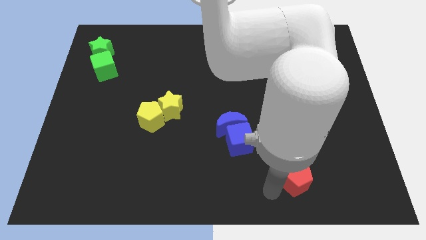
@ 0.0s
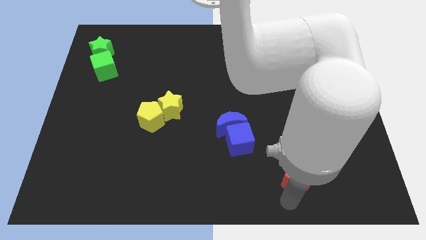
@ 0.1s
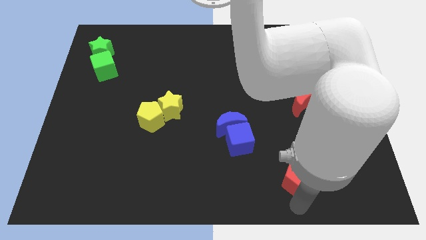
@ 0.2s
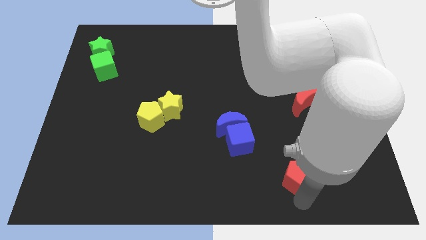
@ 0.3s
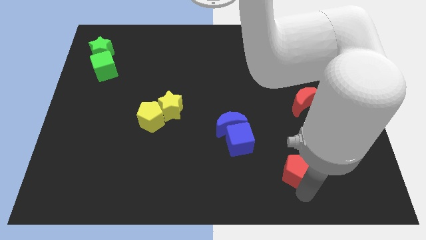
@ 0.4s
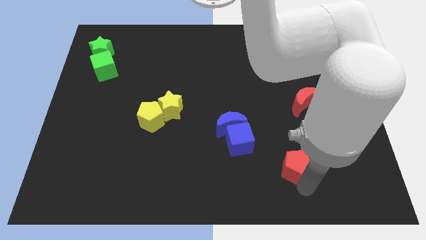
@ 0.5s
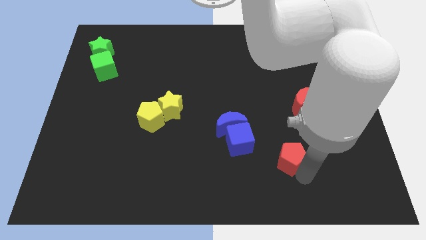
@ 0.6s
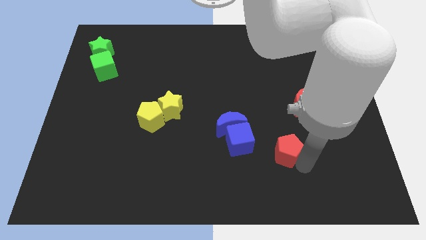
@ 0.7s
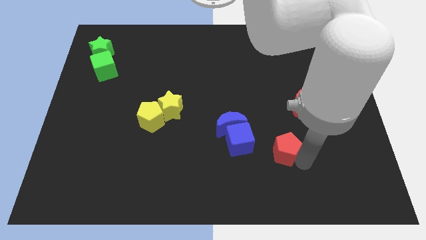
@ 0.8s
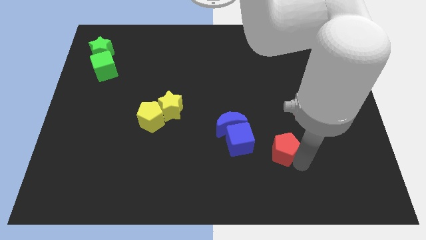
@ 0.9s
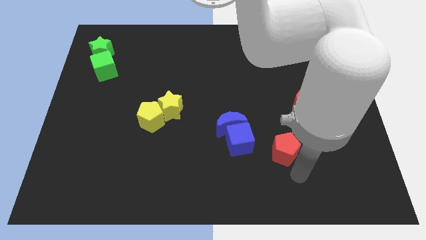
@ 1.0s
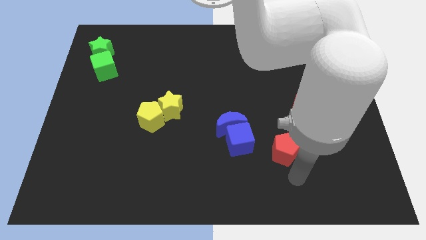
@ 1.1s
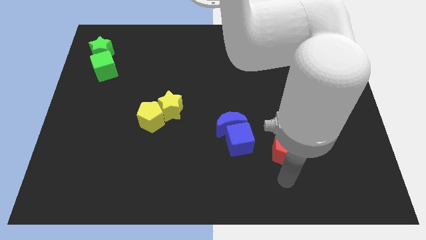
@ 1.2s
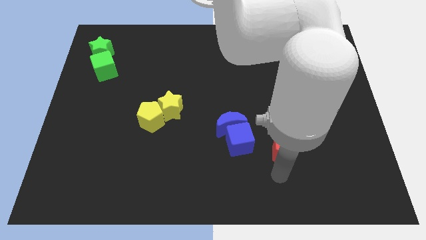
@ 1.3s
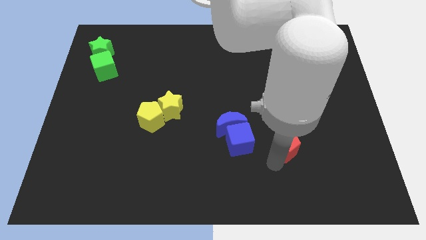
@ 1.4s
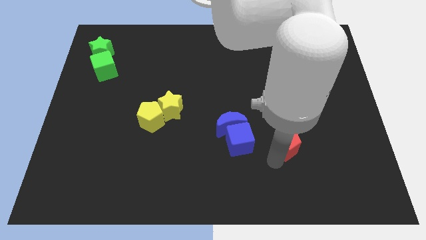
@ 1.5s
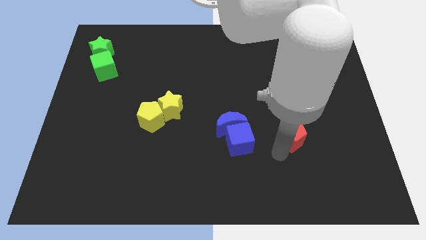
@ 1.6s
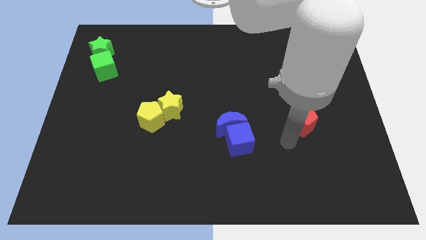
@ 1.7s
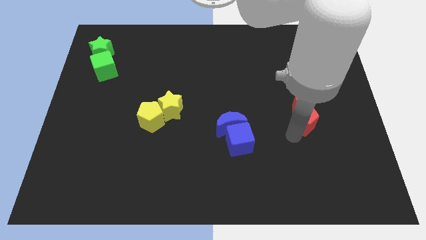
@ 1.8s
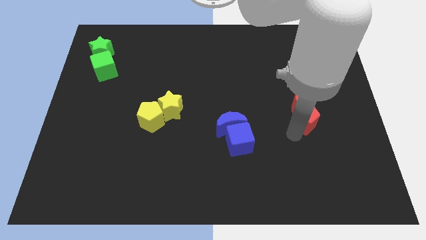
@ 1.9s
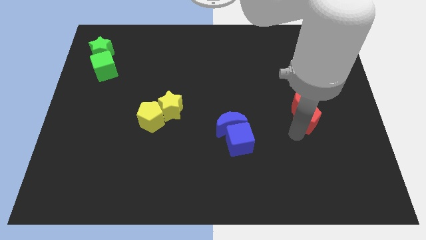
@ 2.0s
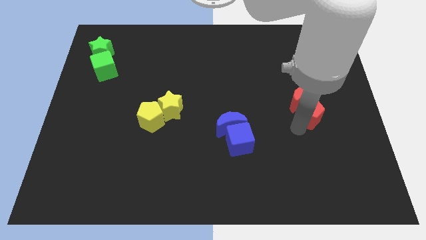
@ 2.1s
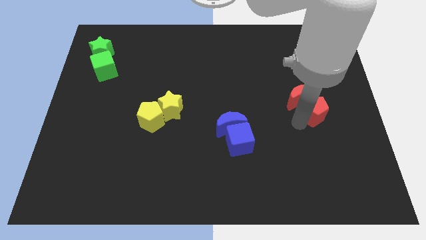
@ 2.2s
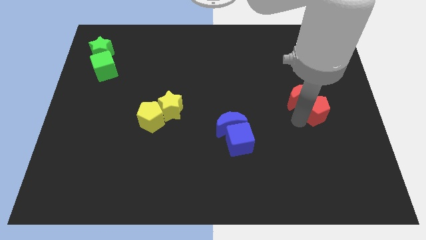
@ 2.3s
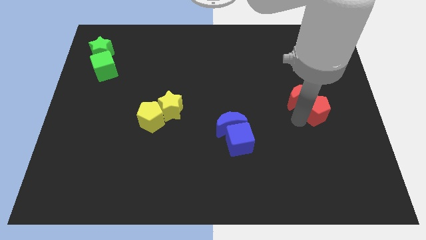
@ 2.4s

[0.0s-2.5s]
move red pentagon below the red moon

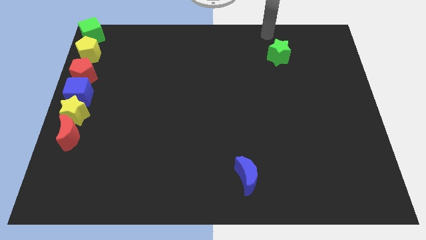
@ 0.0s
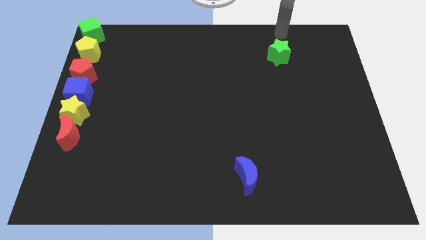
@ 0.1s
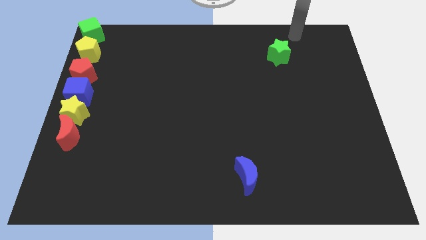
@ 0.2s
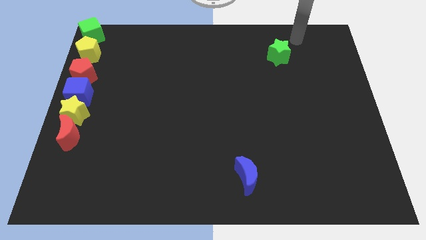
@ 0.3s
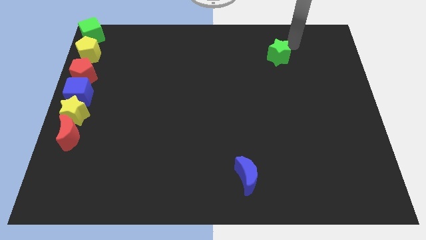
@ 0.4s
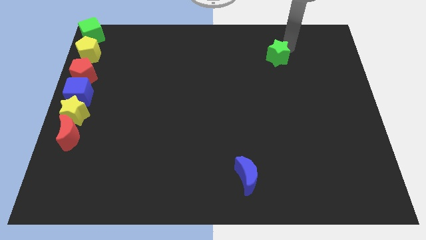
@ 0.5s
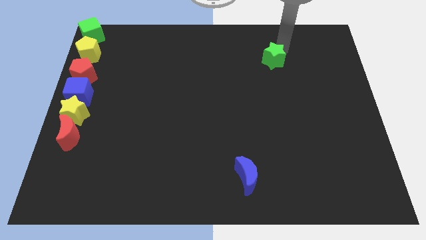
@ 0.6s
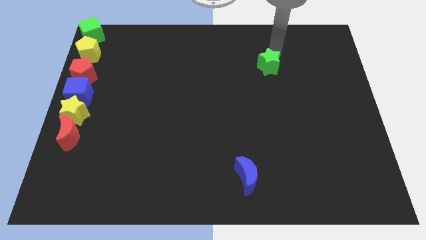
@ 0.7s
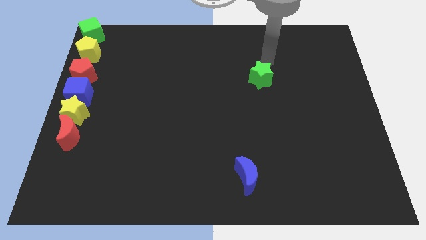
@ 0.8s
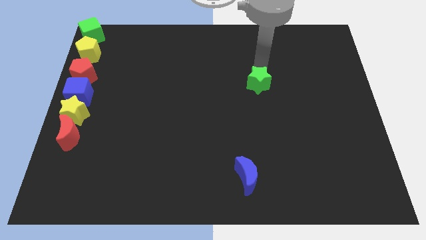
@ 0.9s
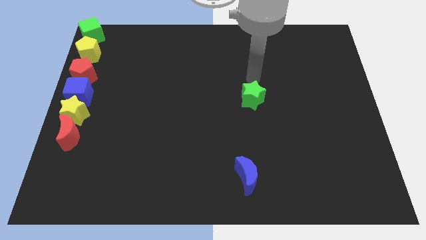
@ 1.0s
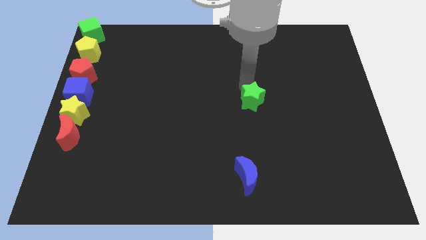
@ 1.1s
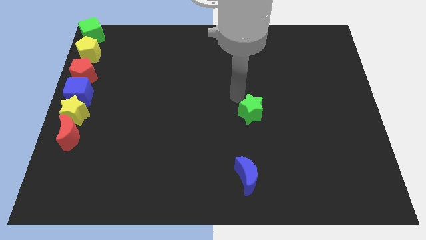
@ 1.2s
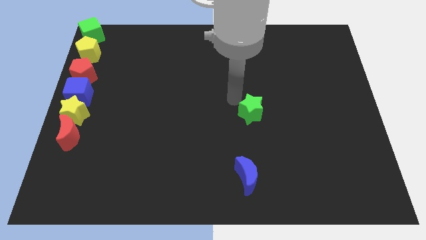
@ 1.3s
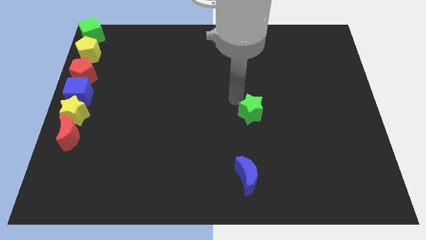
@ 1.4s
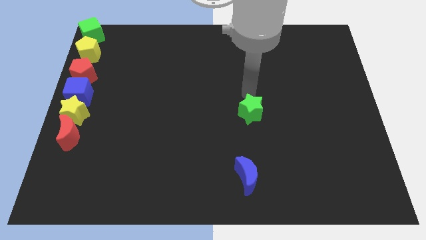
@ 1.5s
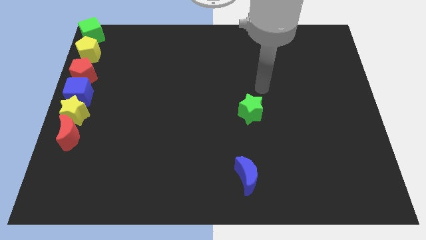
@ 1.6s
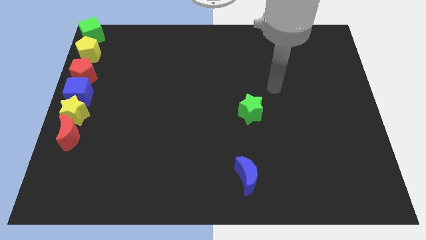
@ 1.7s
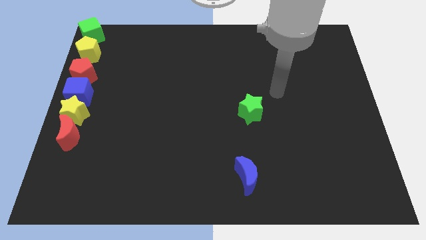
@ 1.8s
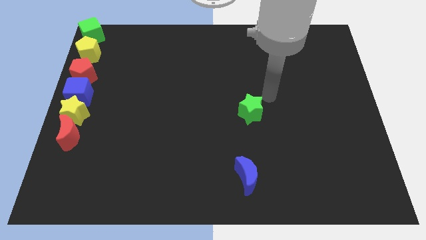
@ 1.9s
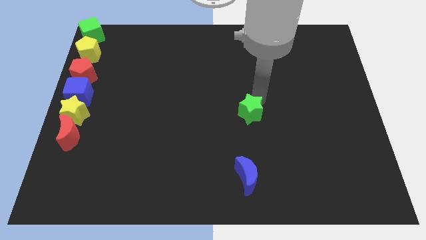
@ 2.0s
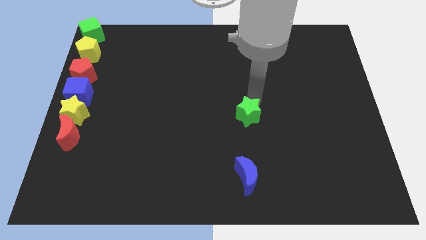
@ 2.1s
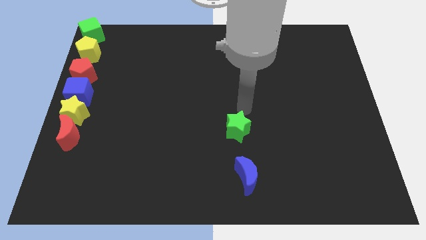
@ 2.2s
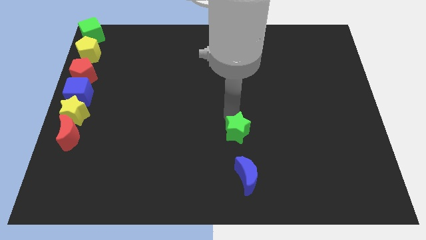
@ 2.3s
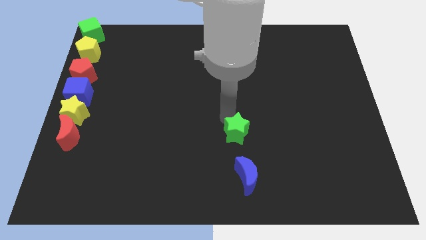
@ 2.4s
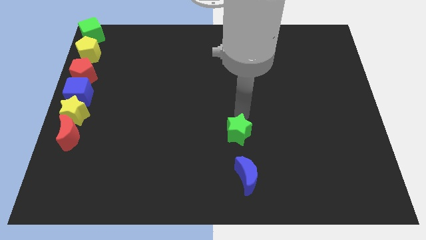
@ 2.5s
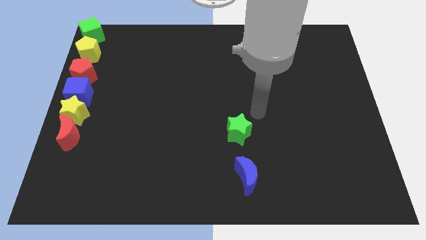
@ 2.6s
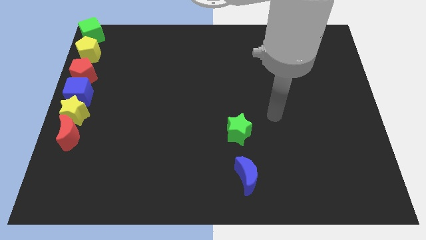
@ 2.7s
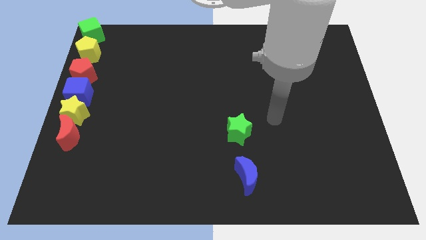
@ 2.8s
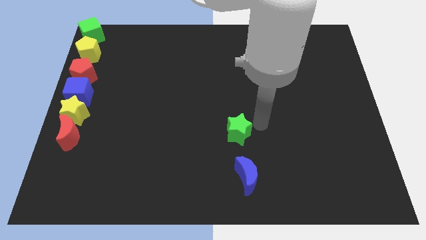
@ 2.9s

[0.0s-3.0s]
put green star on the top of blue moon

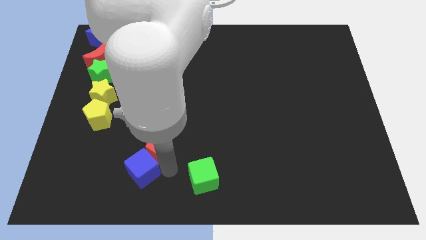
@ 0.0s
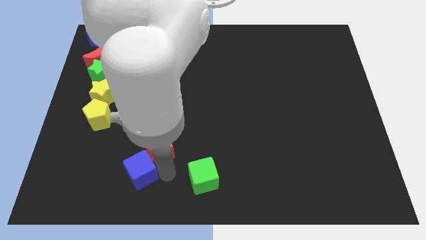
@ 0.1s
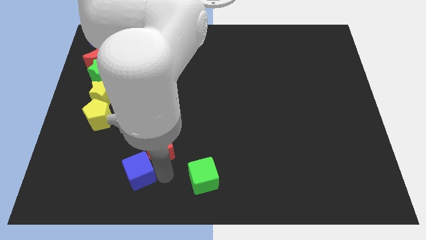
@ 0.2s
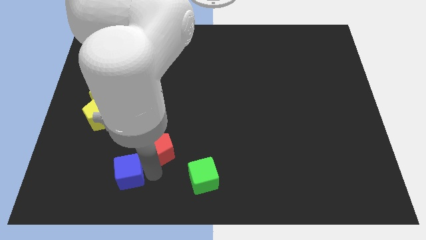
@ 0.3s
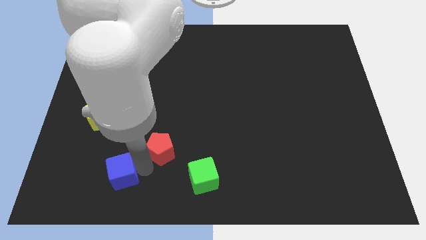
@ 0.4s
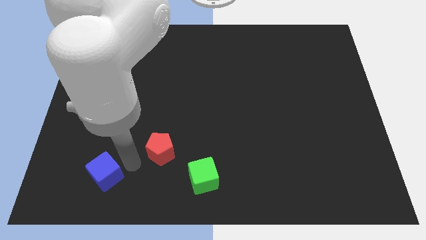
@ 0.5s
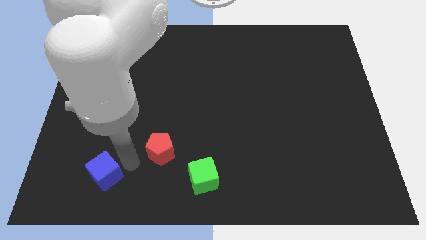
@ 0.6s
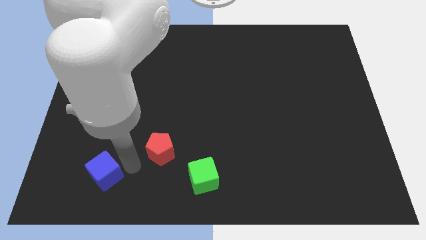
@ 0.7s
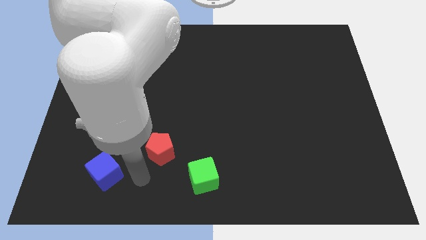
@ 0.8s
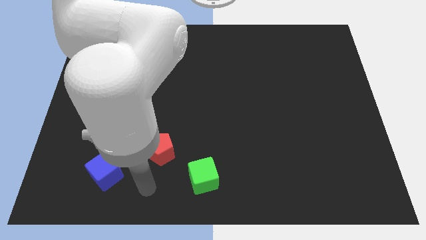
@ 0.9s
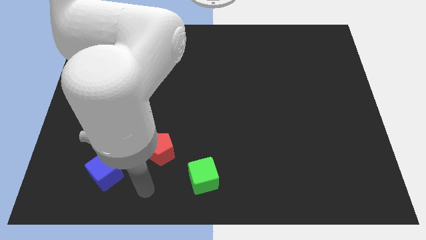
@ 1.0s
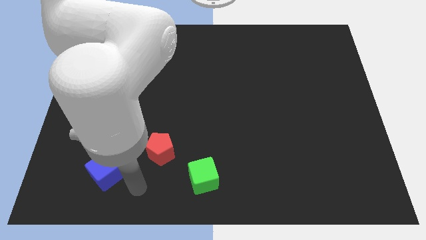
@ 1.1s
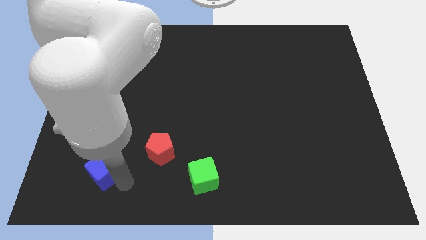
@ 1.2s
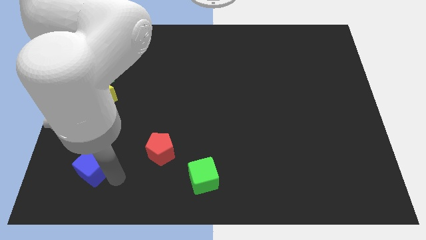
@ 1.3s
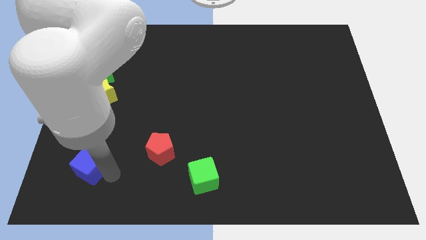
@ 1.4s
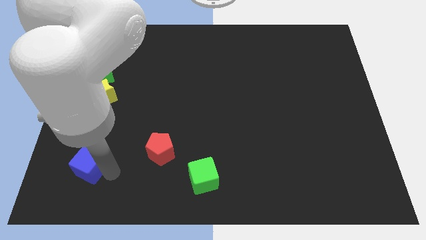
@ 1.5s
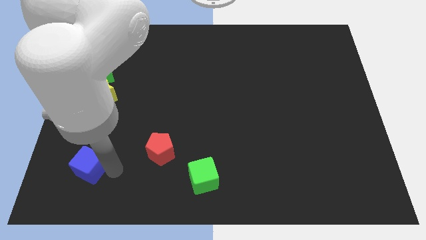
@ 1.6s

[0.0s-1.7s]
take the blue cube away from the red pentagon

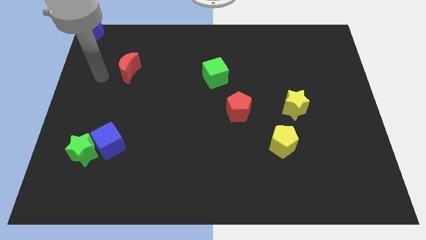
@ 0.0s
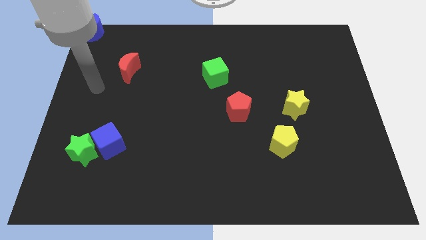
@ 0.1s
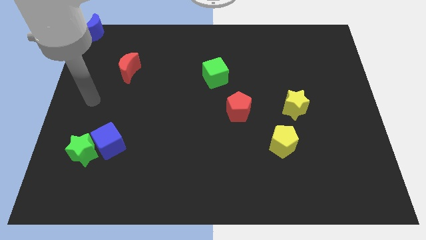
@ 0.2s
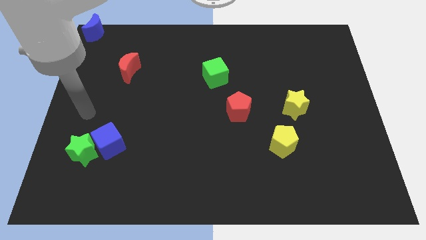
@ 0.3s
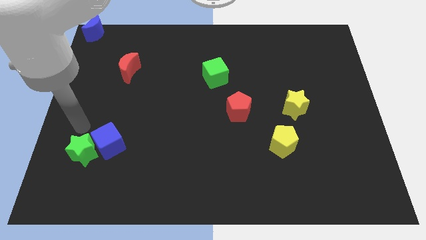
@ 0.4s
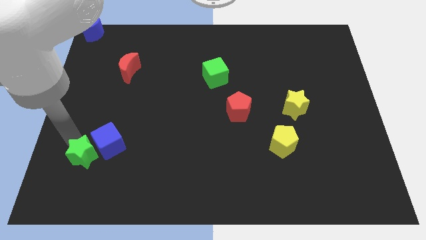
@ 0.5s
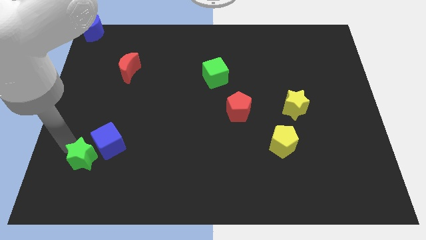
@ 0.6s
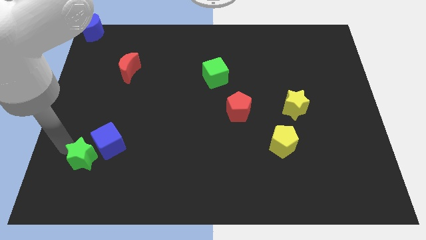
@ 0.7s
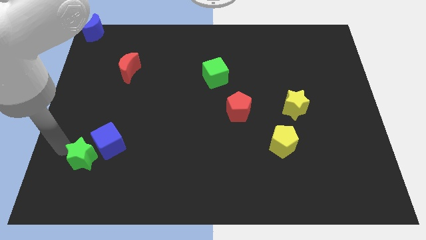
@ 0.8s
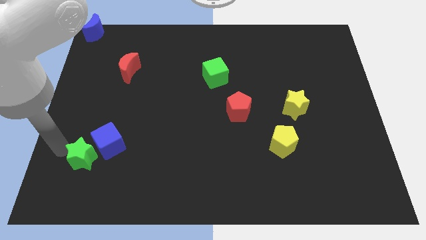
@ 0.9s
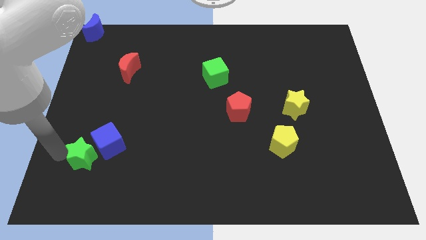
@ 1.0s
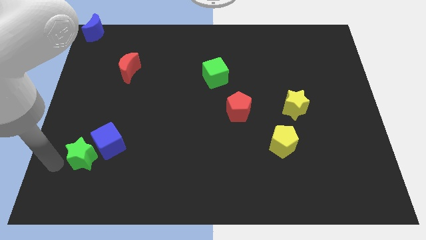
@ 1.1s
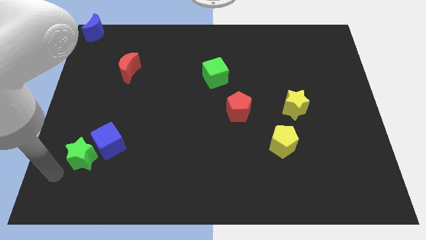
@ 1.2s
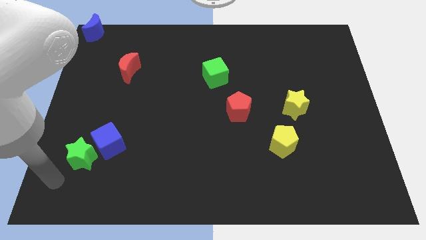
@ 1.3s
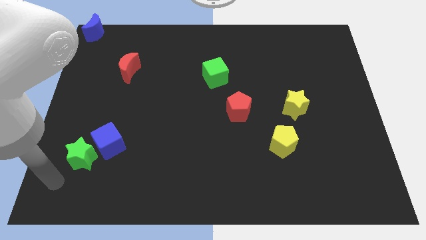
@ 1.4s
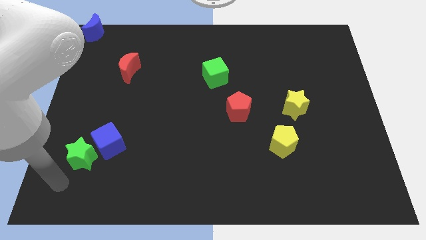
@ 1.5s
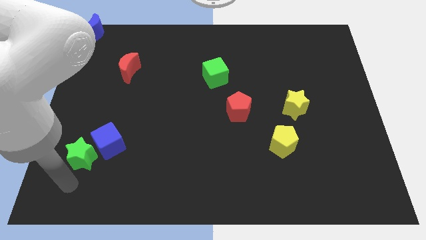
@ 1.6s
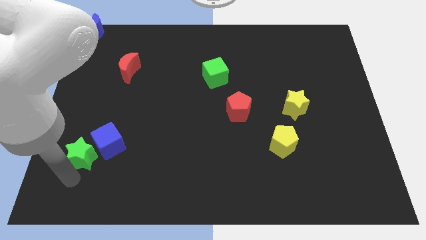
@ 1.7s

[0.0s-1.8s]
place the arm below the green star
